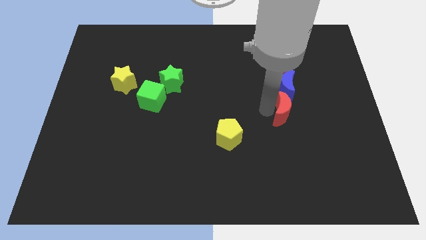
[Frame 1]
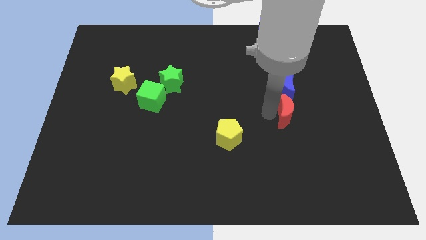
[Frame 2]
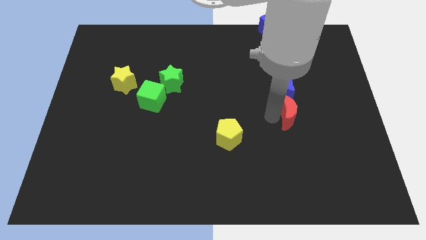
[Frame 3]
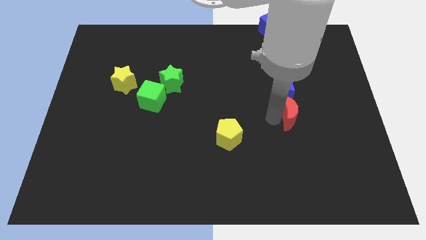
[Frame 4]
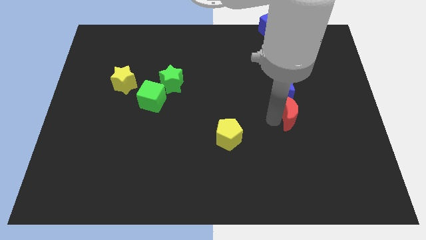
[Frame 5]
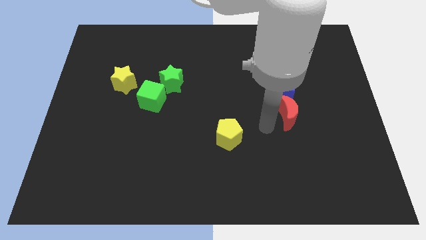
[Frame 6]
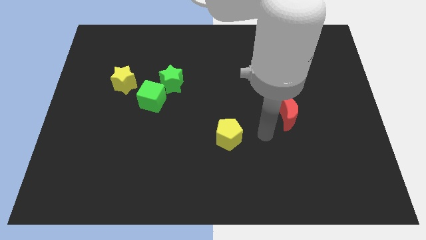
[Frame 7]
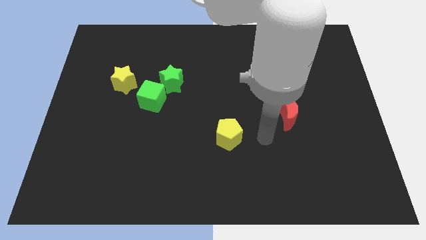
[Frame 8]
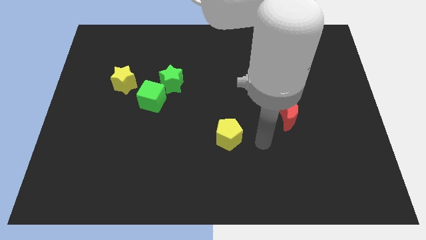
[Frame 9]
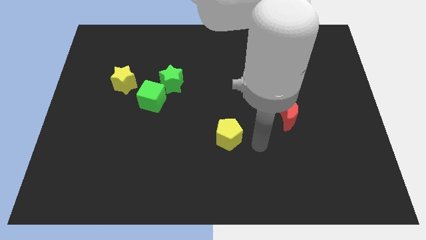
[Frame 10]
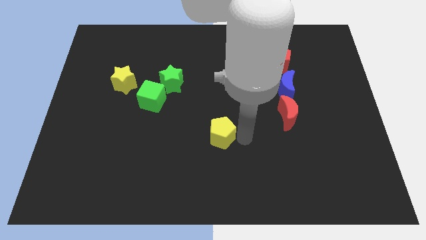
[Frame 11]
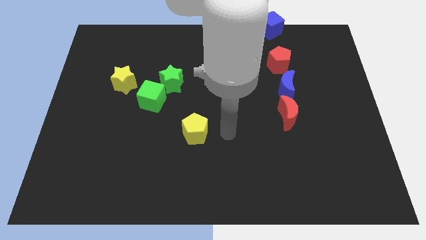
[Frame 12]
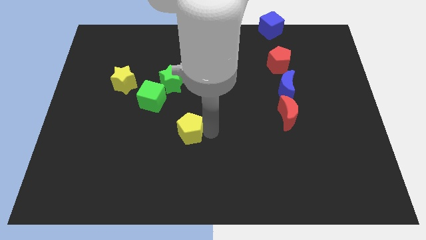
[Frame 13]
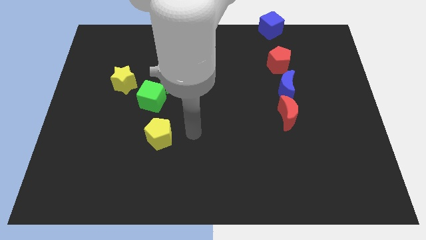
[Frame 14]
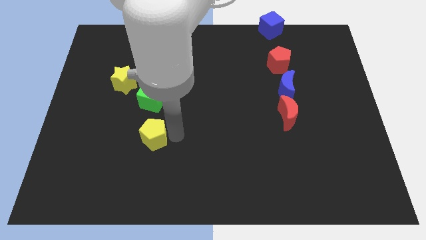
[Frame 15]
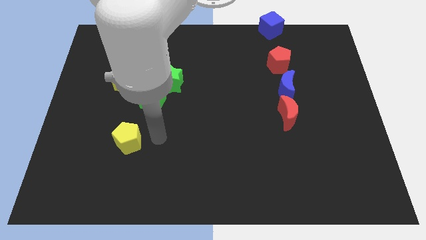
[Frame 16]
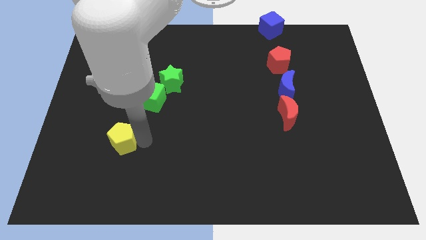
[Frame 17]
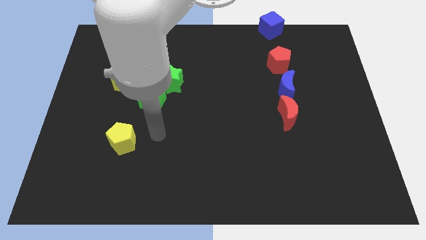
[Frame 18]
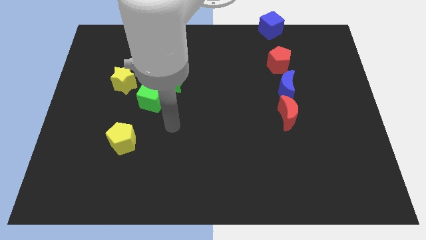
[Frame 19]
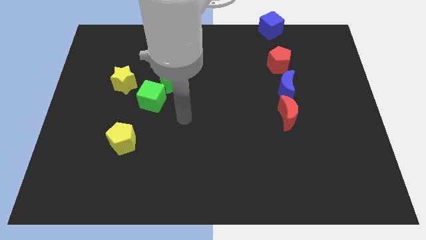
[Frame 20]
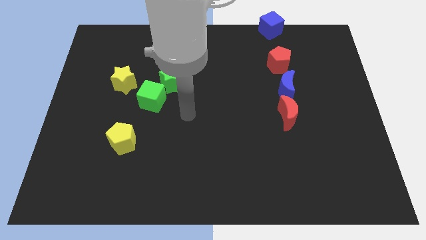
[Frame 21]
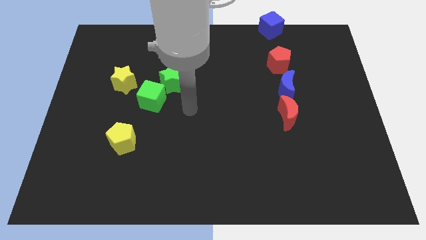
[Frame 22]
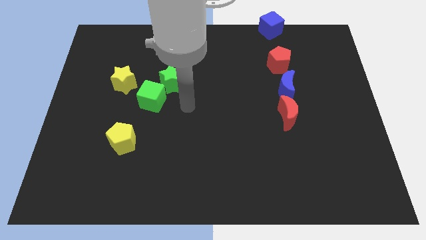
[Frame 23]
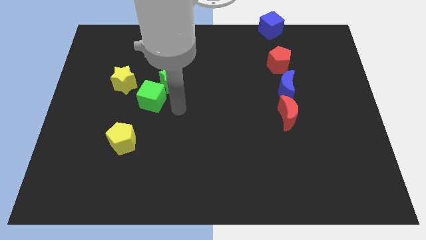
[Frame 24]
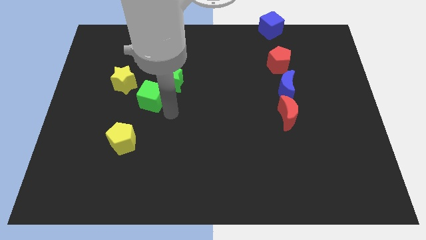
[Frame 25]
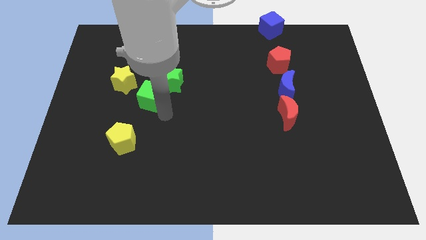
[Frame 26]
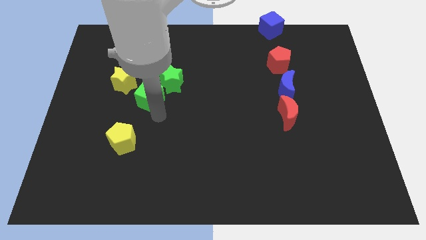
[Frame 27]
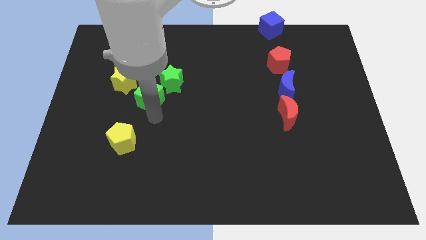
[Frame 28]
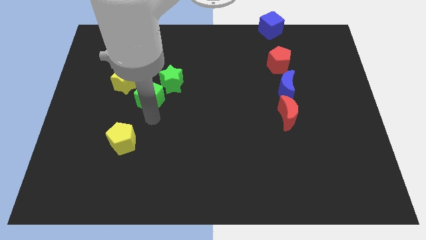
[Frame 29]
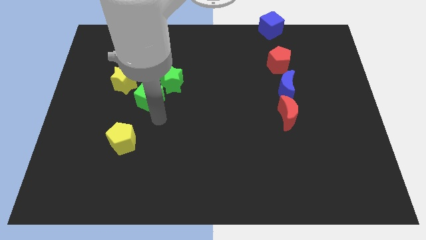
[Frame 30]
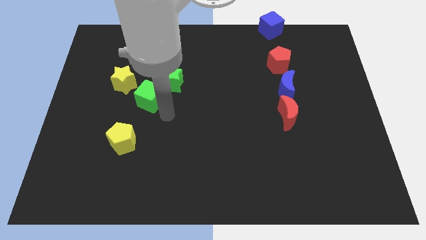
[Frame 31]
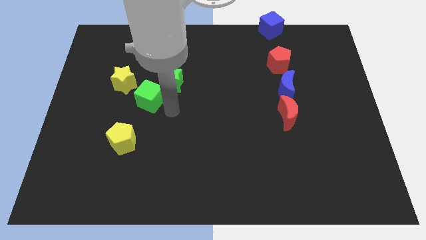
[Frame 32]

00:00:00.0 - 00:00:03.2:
place yellow pentagon vertical below yellow yellow star

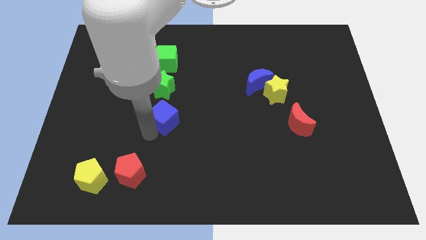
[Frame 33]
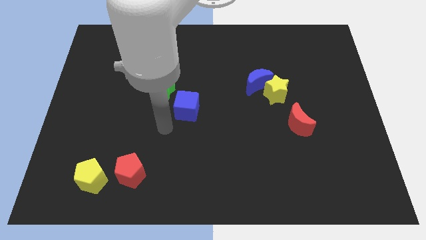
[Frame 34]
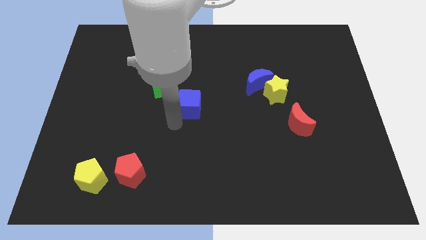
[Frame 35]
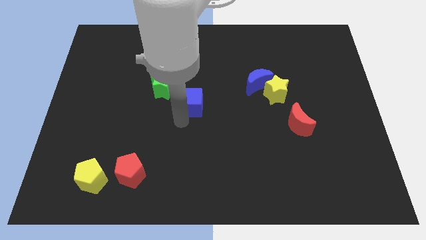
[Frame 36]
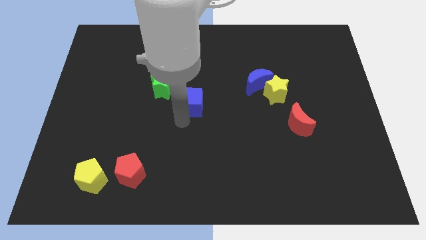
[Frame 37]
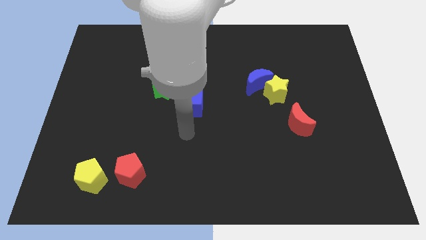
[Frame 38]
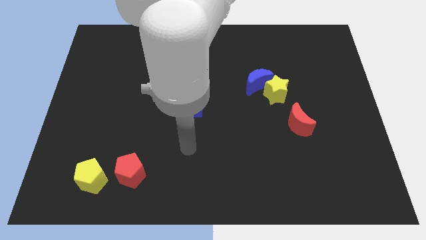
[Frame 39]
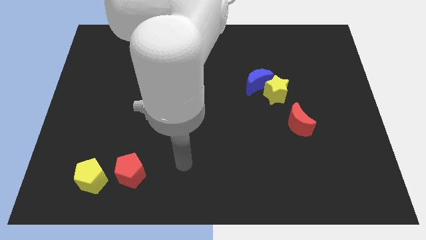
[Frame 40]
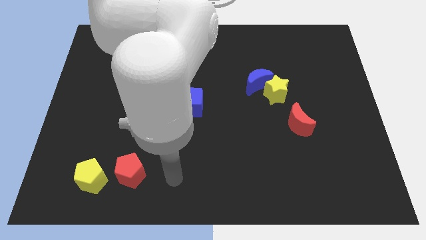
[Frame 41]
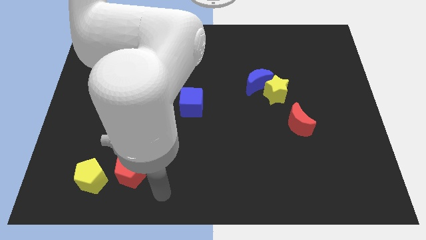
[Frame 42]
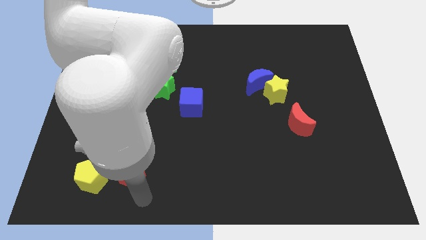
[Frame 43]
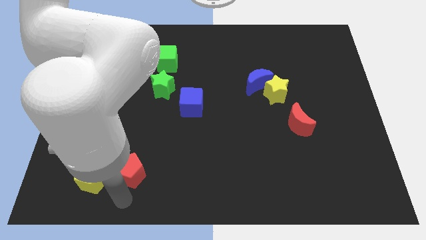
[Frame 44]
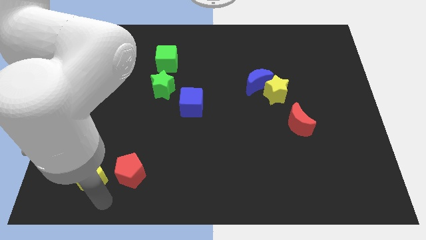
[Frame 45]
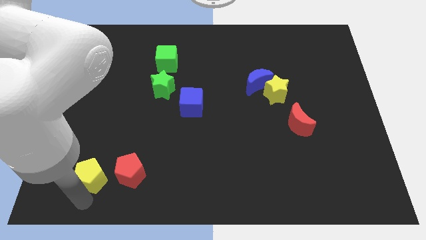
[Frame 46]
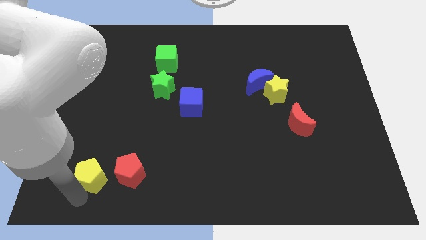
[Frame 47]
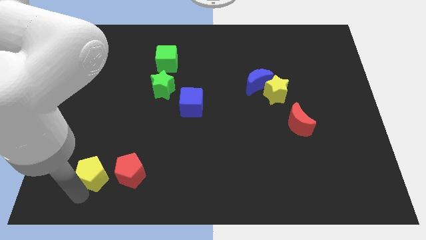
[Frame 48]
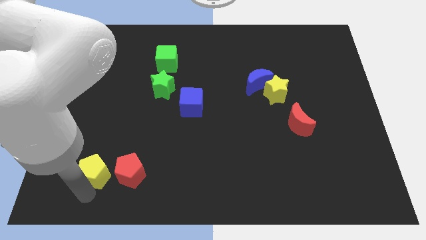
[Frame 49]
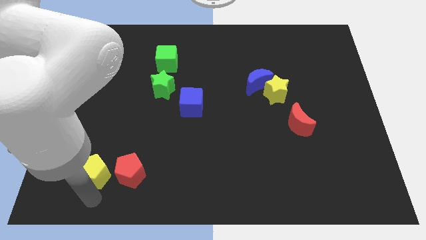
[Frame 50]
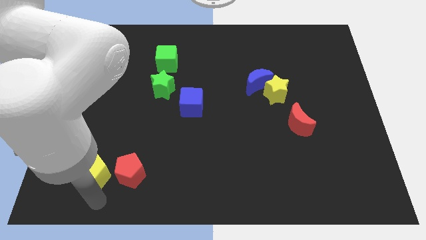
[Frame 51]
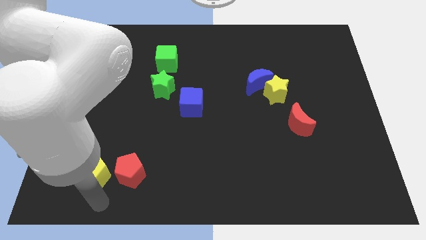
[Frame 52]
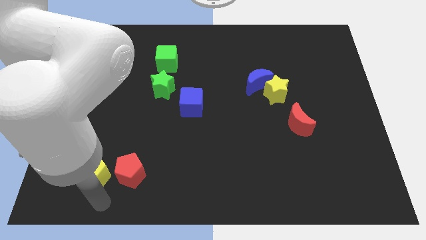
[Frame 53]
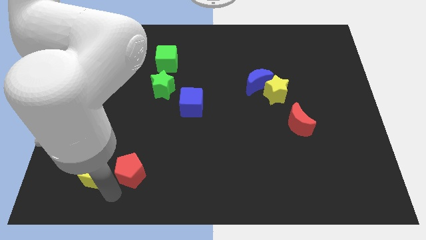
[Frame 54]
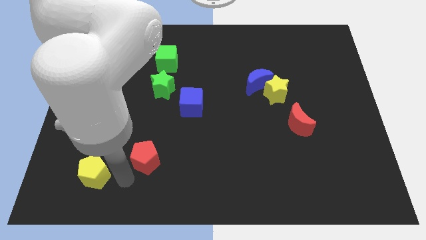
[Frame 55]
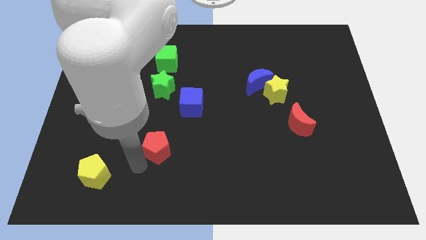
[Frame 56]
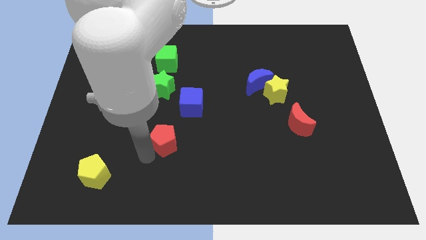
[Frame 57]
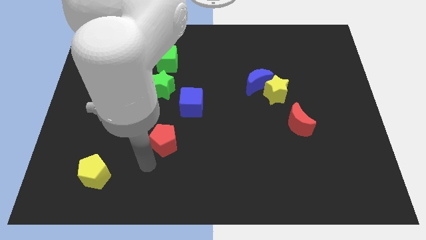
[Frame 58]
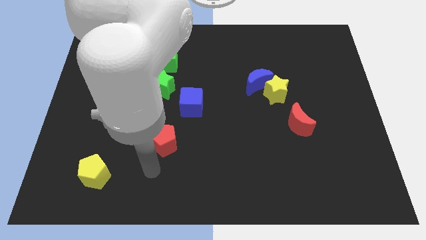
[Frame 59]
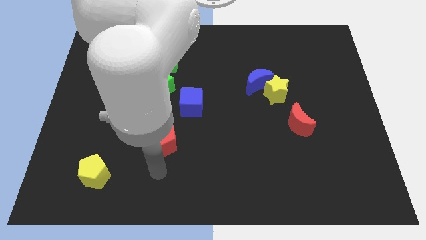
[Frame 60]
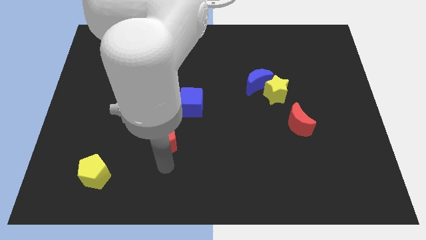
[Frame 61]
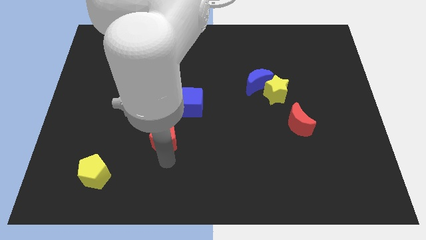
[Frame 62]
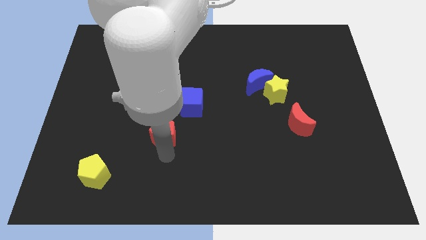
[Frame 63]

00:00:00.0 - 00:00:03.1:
move the red pentagon away from the yellow pentagon

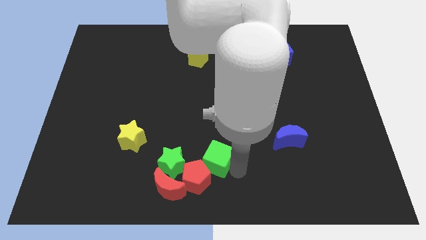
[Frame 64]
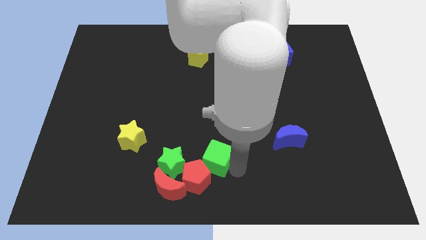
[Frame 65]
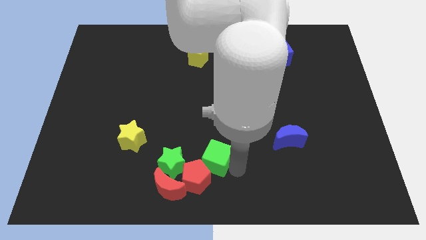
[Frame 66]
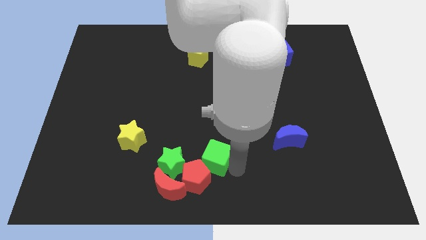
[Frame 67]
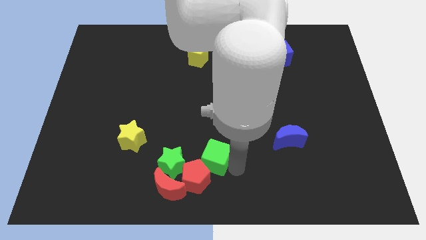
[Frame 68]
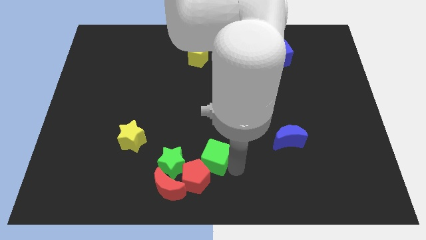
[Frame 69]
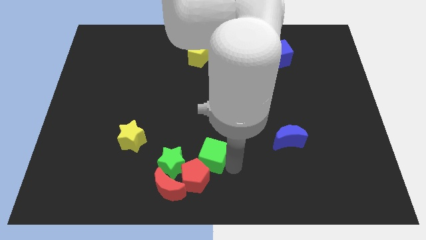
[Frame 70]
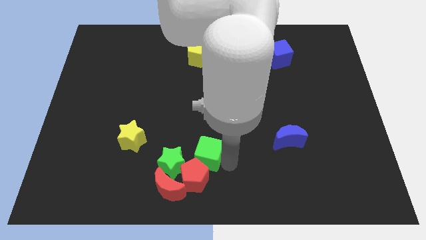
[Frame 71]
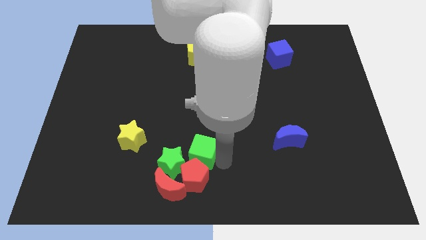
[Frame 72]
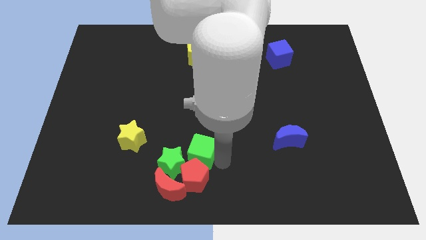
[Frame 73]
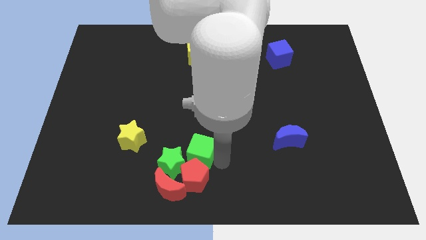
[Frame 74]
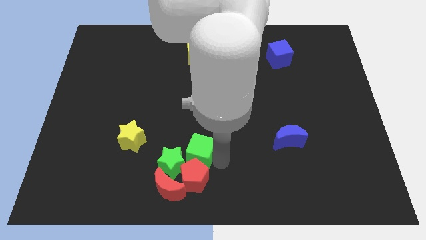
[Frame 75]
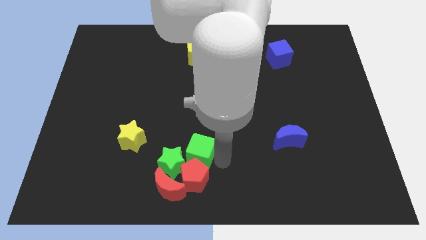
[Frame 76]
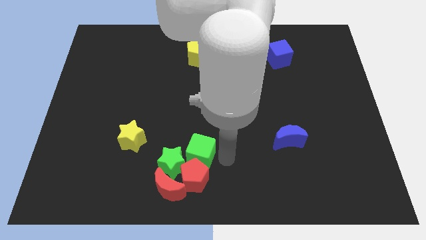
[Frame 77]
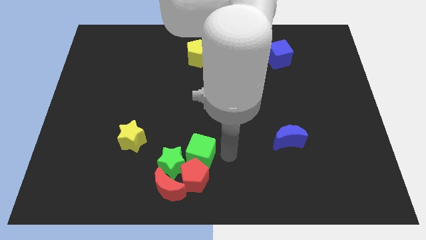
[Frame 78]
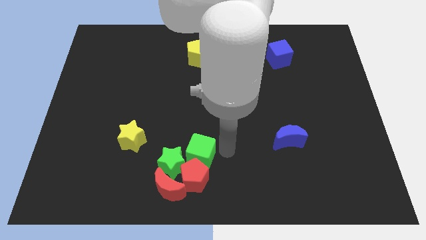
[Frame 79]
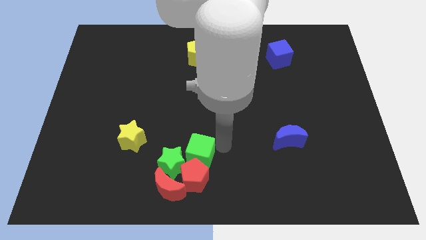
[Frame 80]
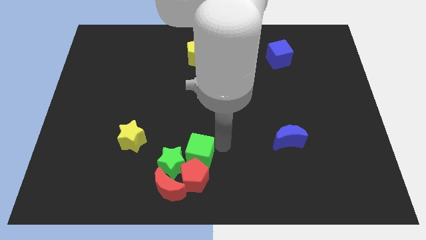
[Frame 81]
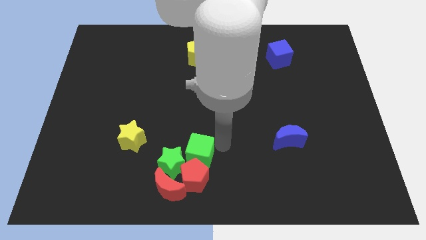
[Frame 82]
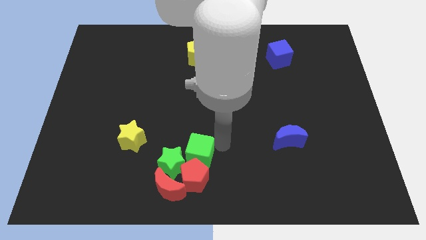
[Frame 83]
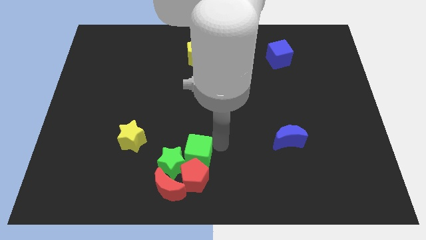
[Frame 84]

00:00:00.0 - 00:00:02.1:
move green cube towards the upper side of the red pentagon

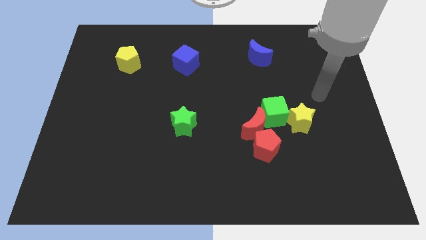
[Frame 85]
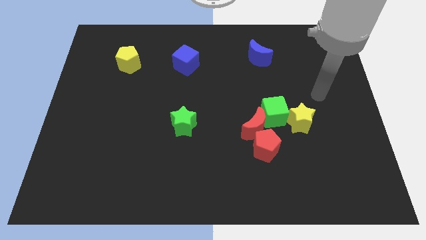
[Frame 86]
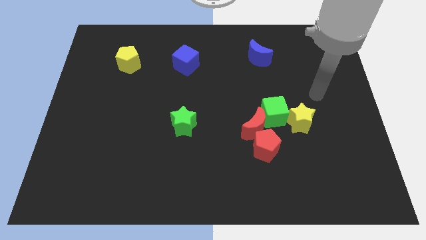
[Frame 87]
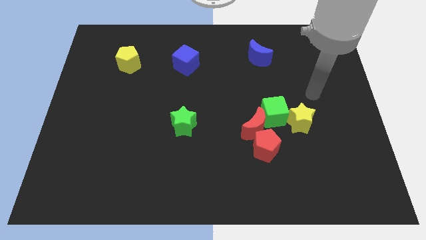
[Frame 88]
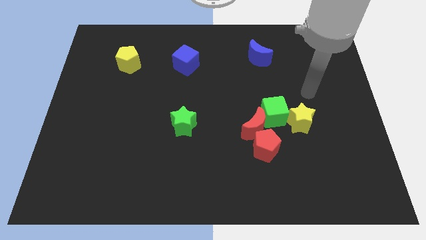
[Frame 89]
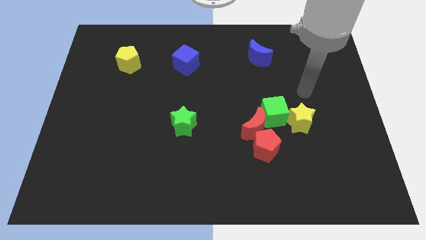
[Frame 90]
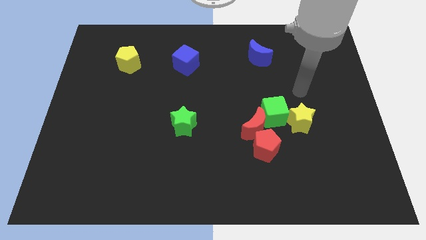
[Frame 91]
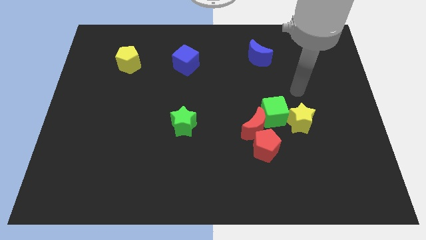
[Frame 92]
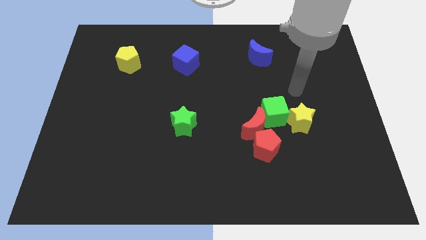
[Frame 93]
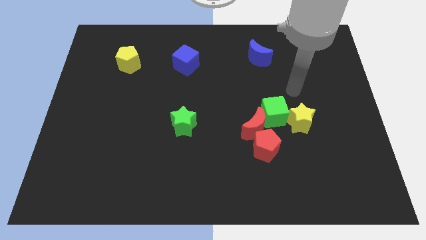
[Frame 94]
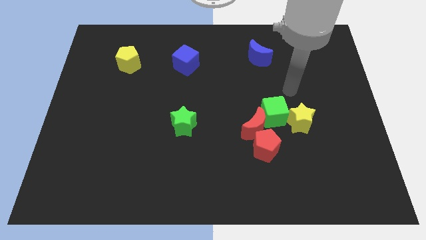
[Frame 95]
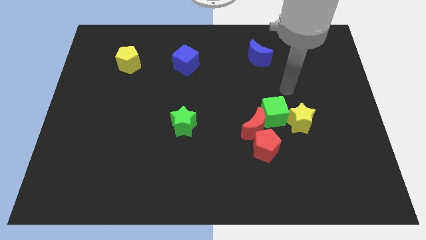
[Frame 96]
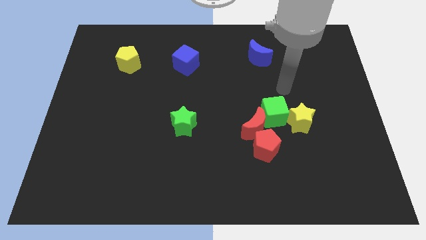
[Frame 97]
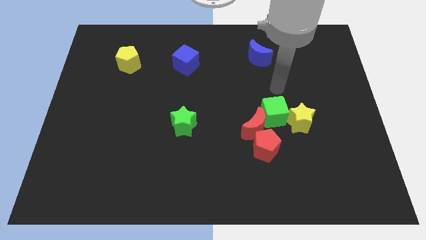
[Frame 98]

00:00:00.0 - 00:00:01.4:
point your hand above the green cube
